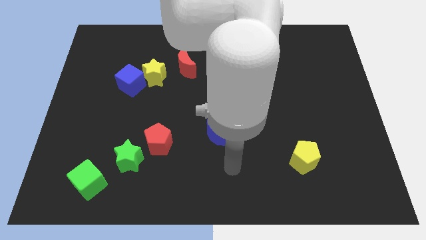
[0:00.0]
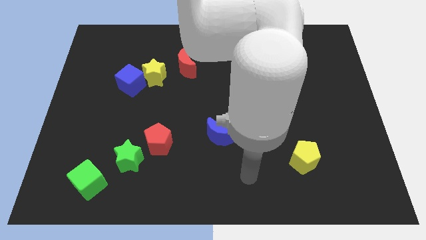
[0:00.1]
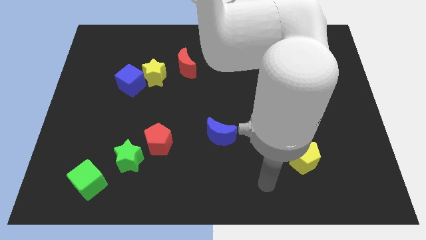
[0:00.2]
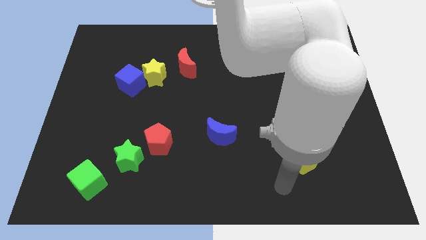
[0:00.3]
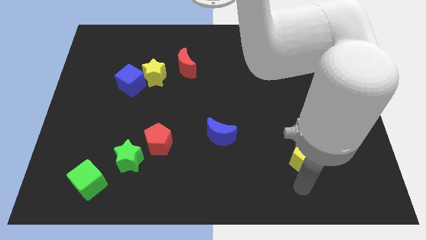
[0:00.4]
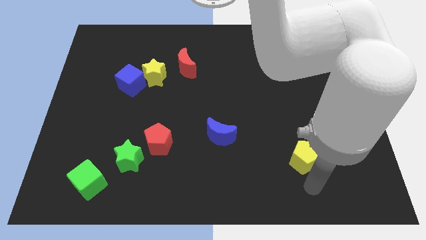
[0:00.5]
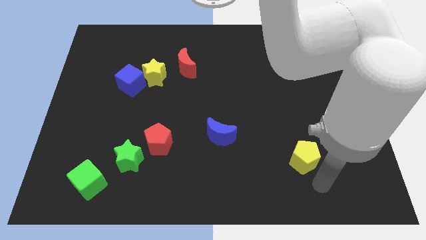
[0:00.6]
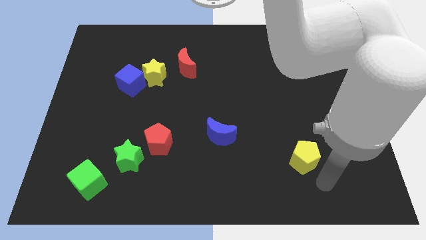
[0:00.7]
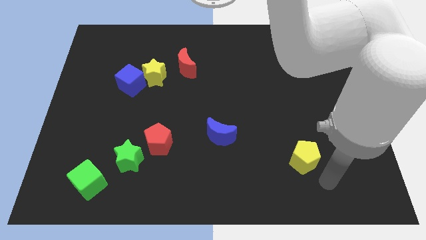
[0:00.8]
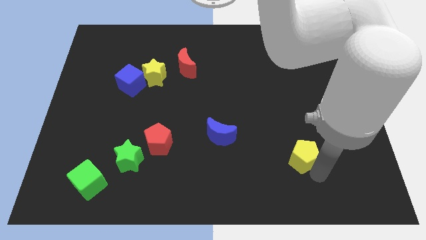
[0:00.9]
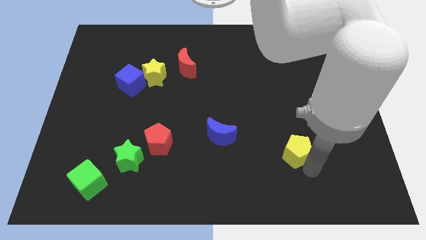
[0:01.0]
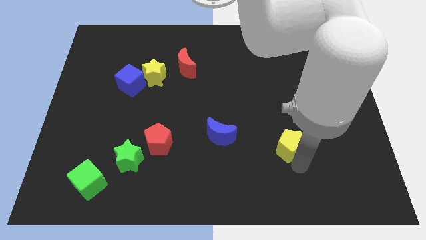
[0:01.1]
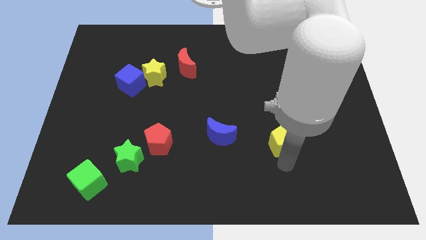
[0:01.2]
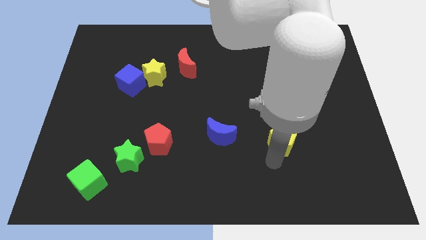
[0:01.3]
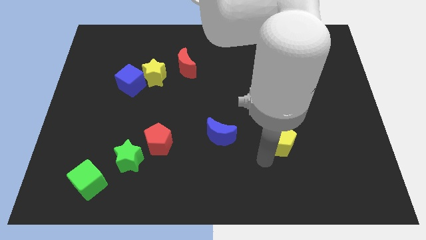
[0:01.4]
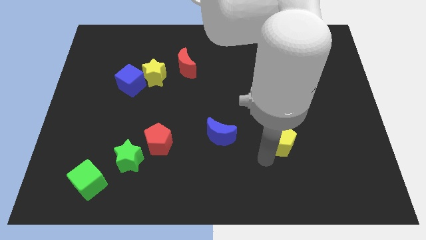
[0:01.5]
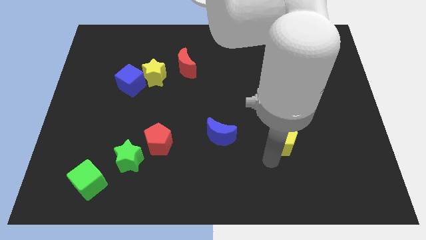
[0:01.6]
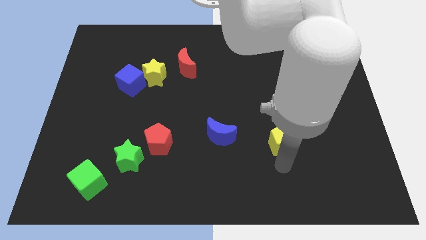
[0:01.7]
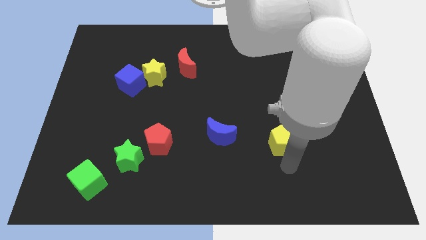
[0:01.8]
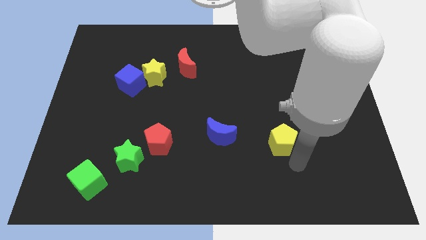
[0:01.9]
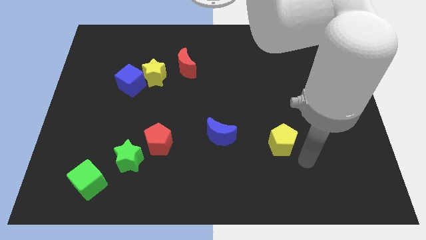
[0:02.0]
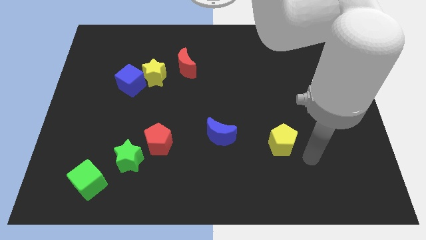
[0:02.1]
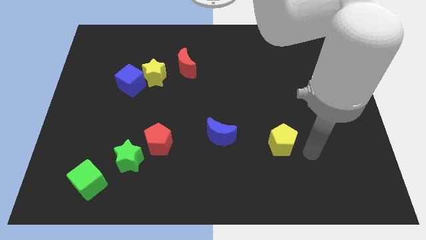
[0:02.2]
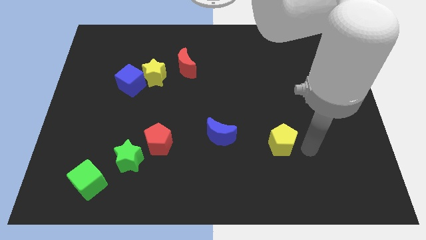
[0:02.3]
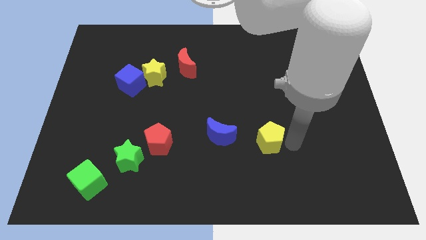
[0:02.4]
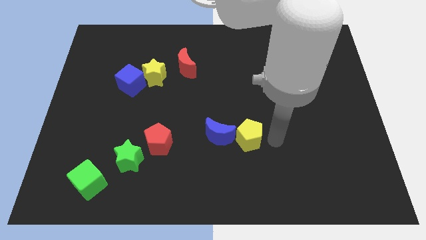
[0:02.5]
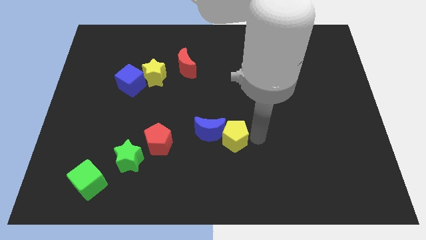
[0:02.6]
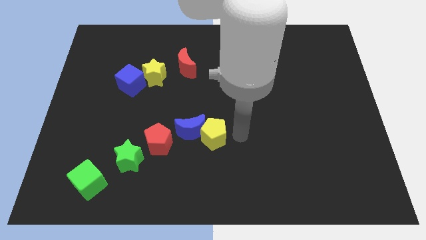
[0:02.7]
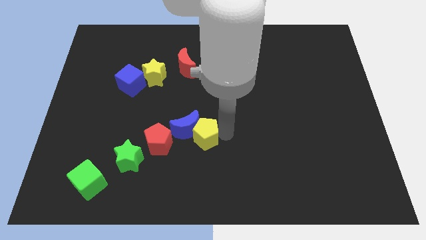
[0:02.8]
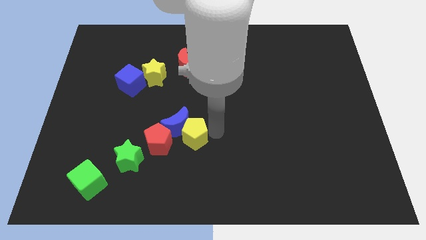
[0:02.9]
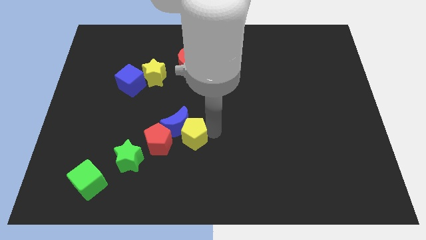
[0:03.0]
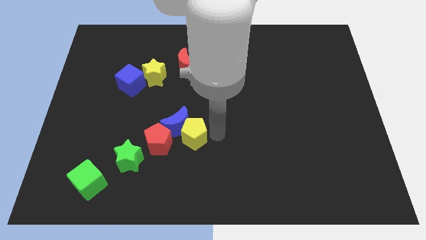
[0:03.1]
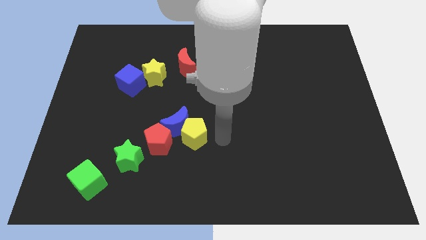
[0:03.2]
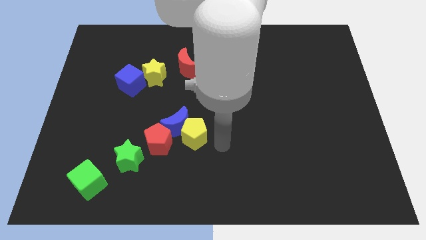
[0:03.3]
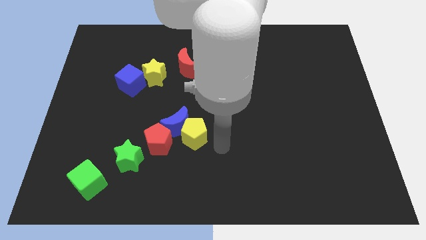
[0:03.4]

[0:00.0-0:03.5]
push the yellow pentagon to the right of the blue crescent

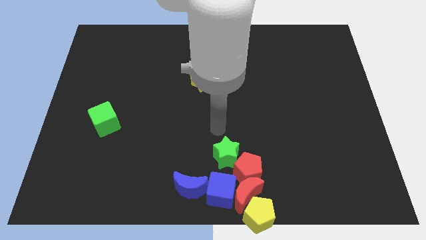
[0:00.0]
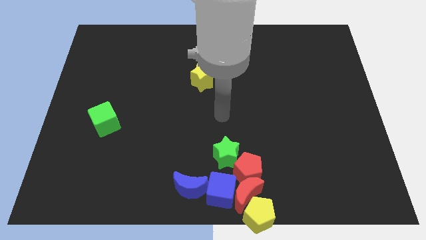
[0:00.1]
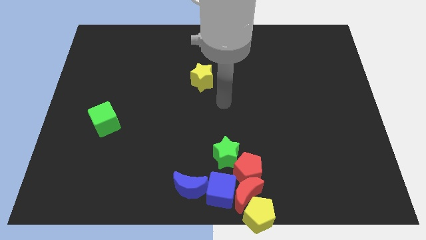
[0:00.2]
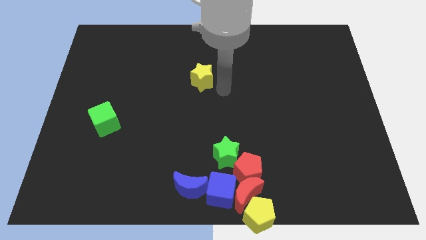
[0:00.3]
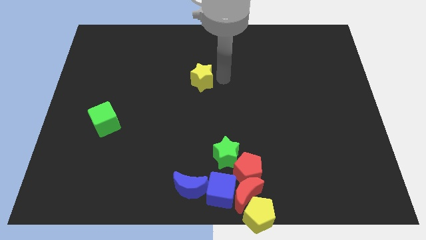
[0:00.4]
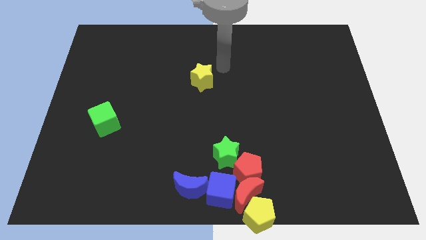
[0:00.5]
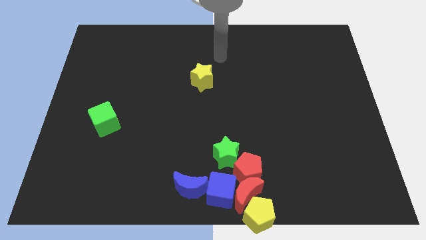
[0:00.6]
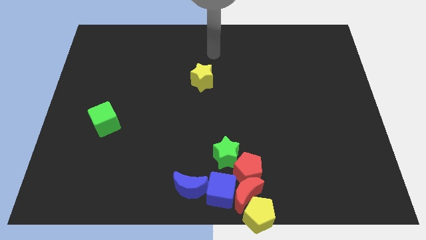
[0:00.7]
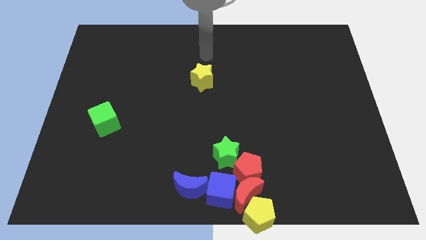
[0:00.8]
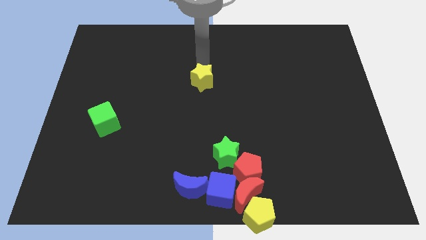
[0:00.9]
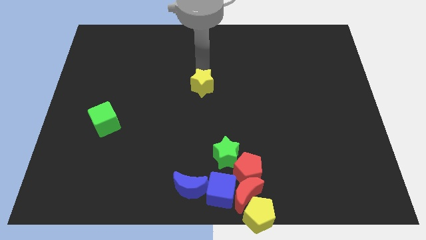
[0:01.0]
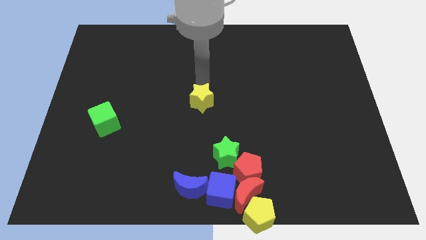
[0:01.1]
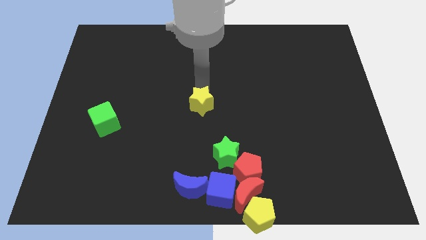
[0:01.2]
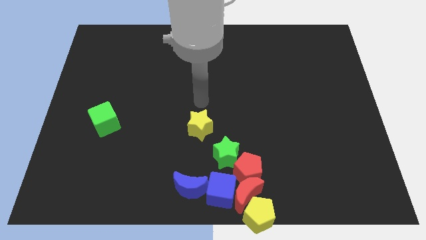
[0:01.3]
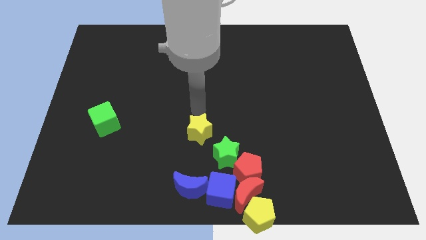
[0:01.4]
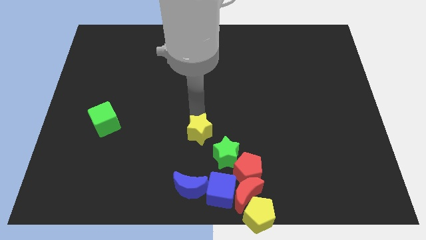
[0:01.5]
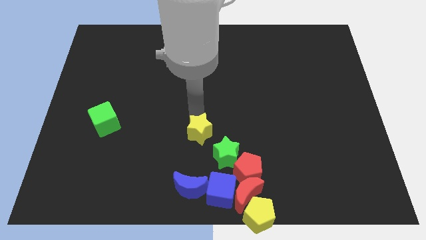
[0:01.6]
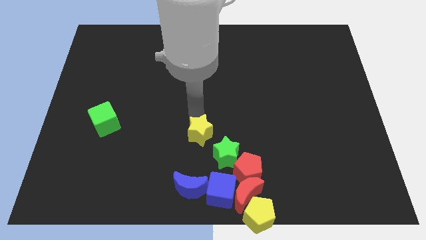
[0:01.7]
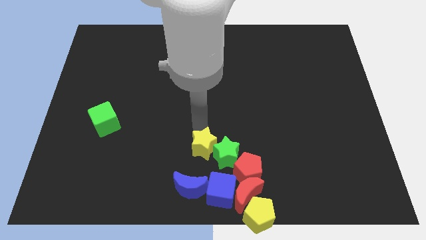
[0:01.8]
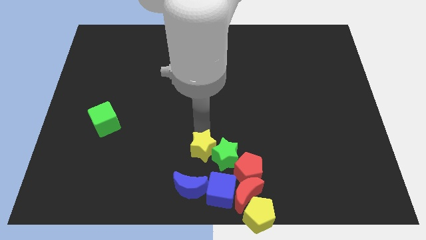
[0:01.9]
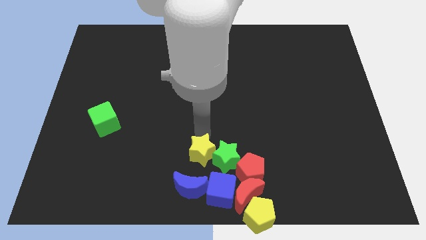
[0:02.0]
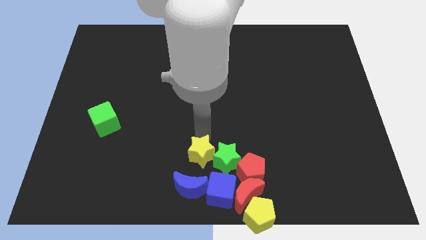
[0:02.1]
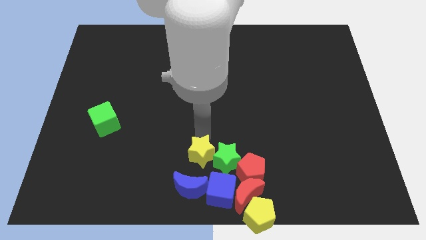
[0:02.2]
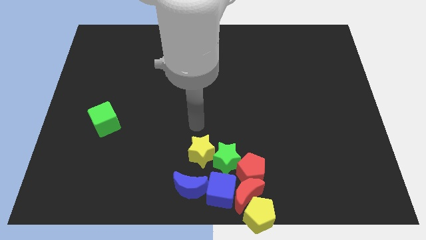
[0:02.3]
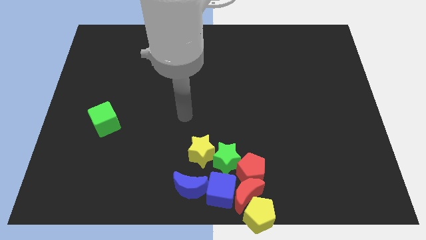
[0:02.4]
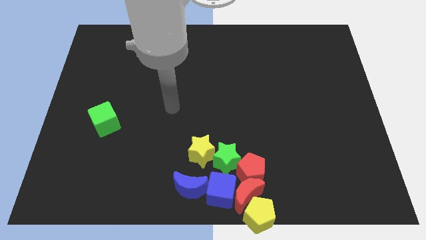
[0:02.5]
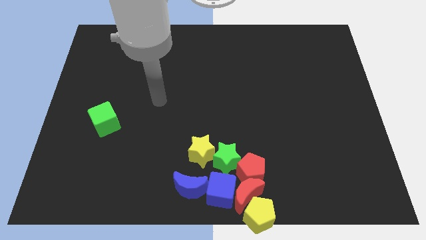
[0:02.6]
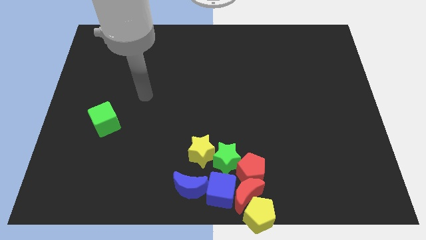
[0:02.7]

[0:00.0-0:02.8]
move the yellow star to the left of the green star

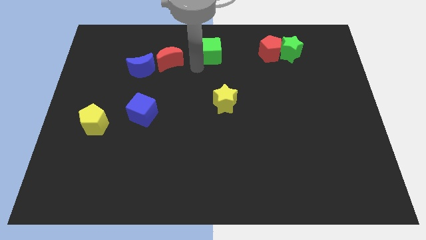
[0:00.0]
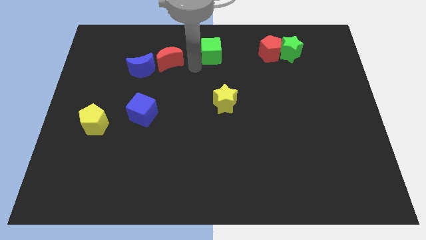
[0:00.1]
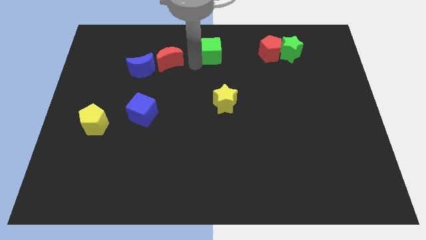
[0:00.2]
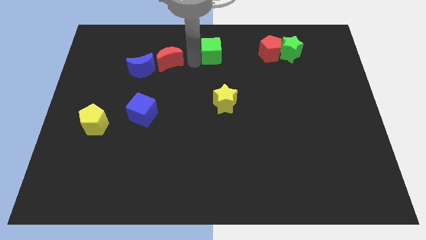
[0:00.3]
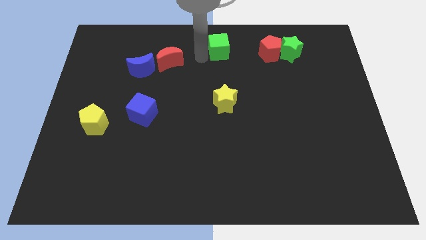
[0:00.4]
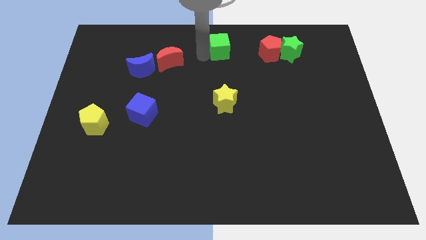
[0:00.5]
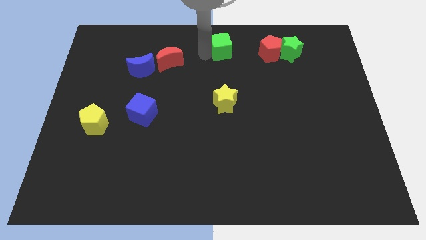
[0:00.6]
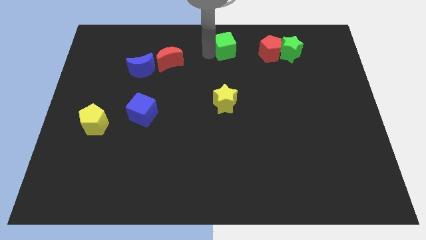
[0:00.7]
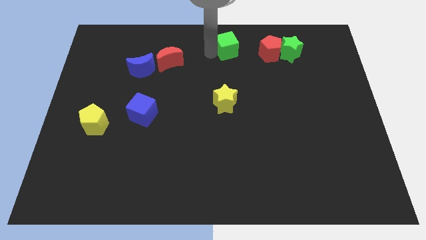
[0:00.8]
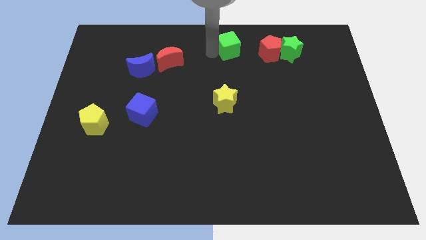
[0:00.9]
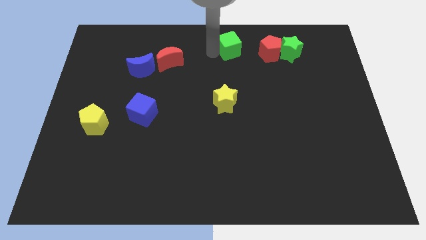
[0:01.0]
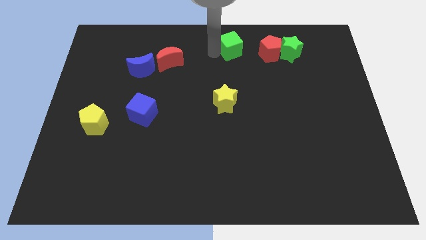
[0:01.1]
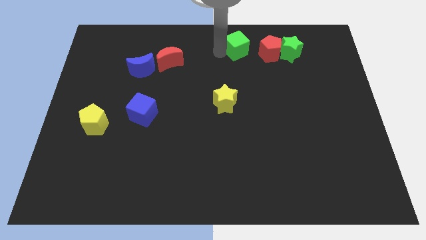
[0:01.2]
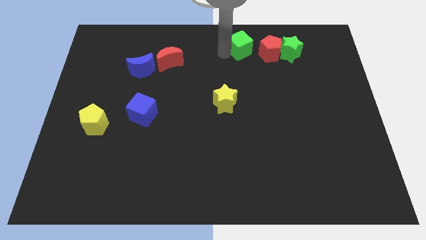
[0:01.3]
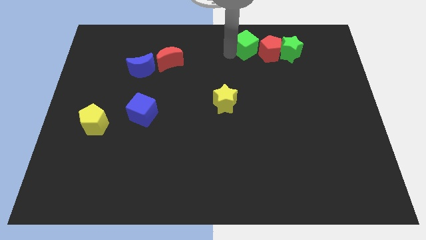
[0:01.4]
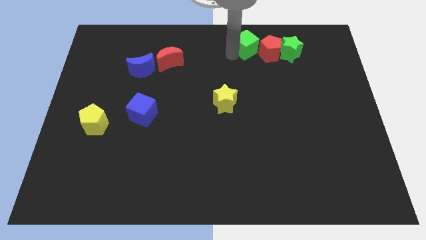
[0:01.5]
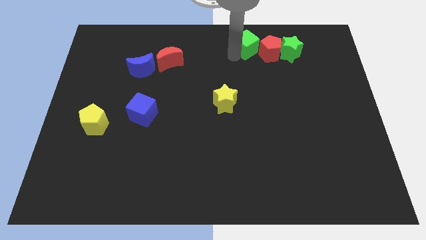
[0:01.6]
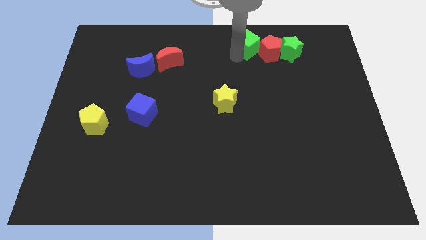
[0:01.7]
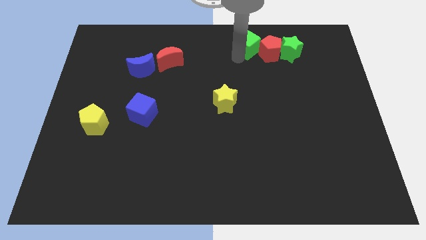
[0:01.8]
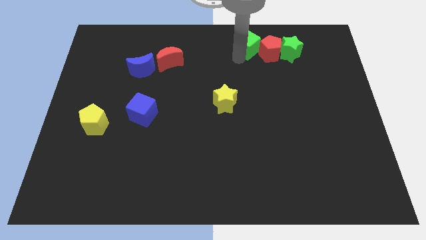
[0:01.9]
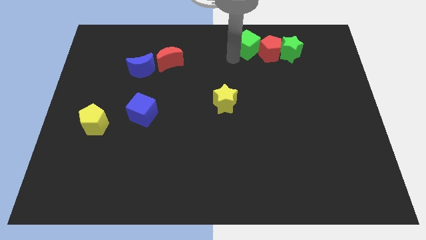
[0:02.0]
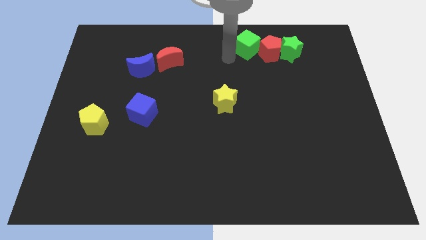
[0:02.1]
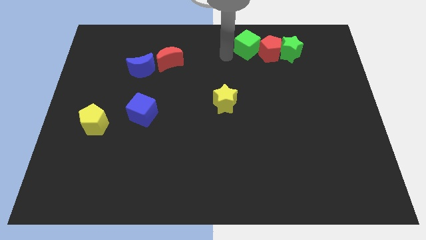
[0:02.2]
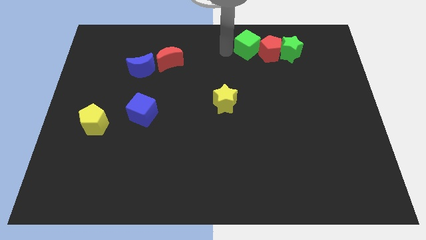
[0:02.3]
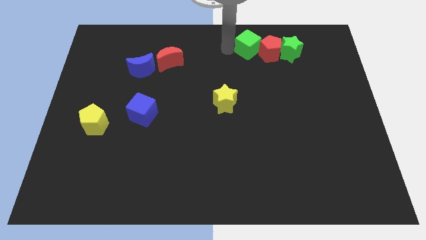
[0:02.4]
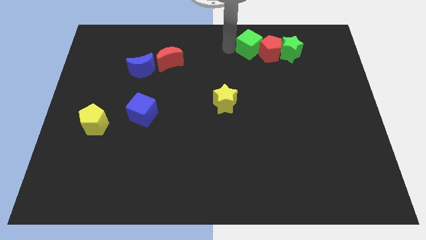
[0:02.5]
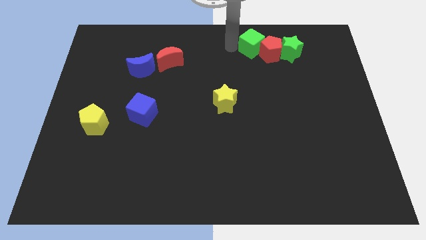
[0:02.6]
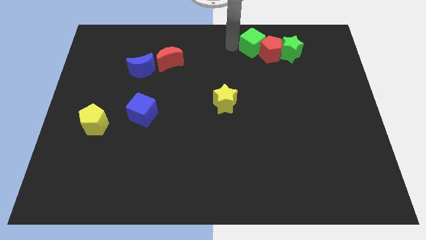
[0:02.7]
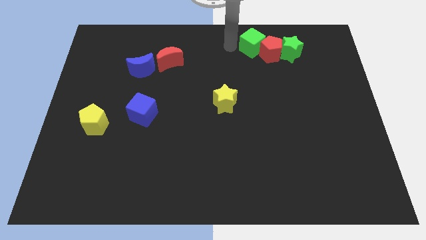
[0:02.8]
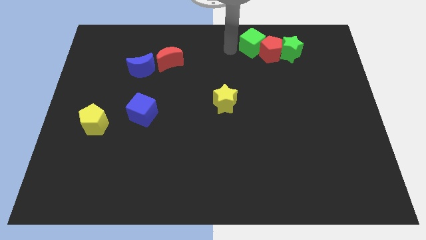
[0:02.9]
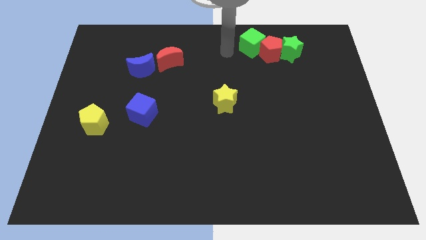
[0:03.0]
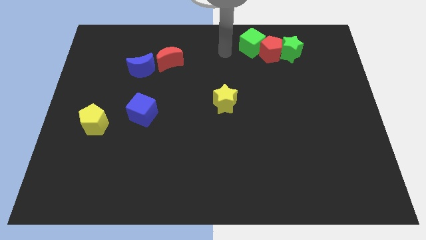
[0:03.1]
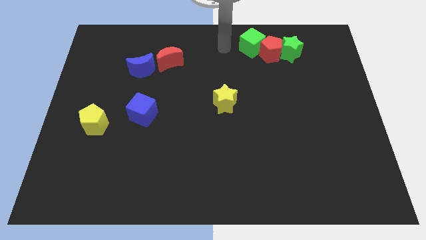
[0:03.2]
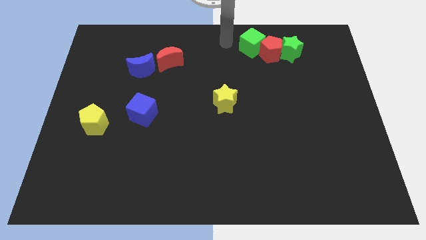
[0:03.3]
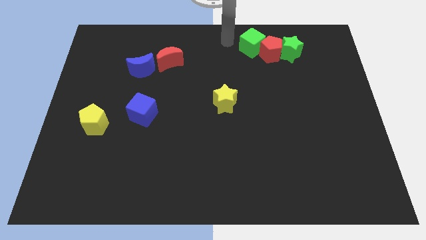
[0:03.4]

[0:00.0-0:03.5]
push the green cube left to the red pentagon
